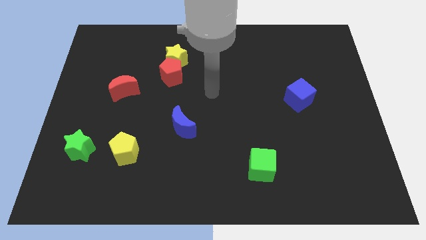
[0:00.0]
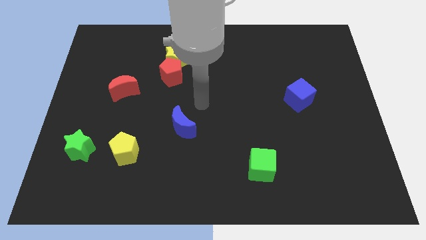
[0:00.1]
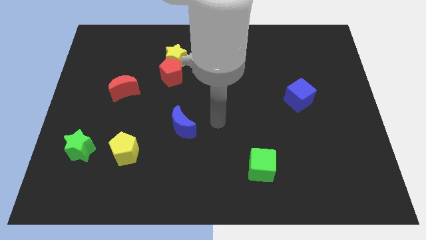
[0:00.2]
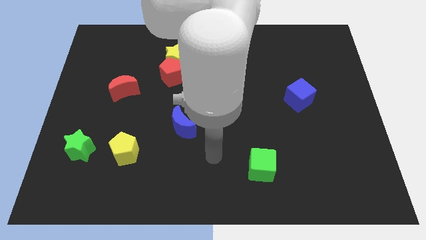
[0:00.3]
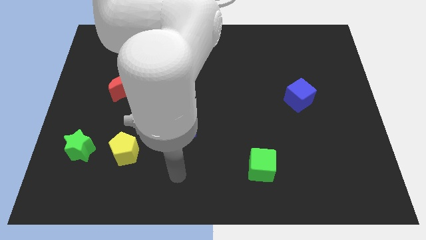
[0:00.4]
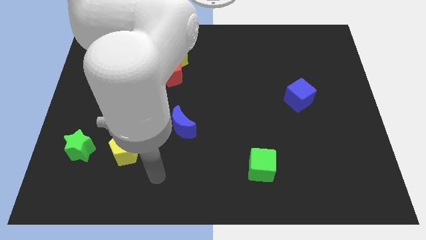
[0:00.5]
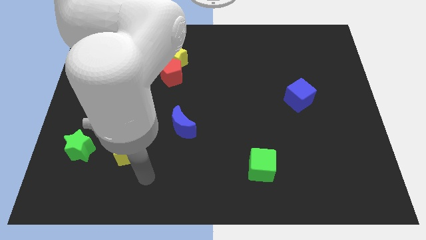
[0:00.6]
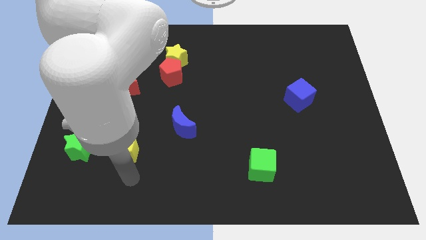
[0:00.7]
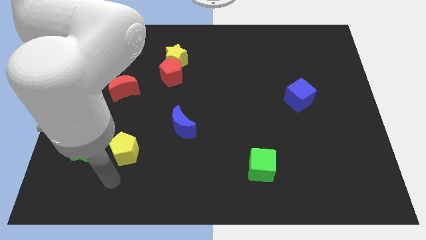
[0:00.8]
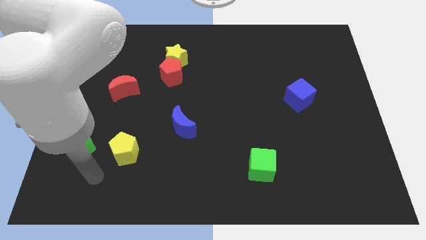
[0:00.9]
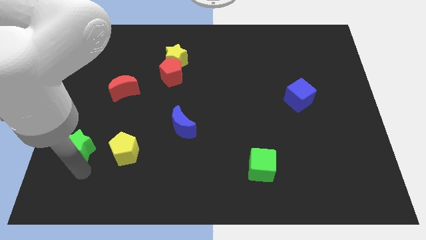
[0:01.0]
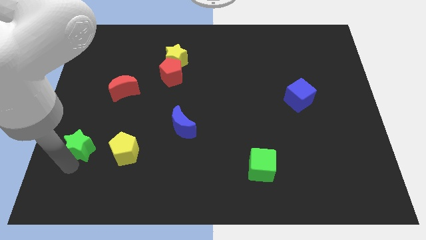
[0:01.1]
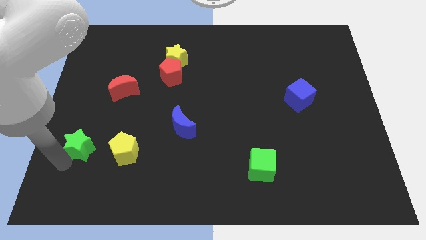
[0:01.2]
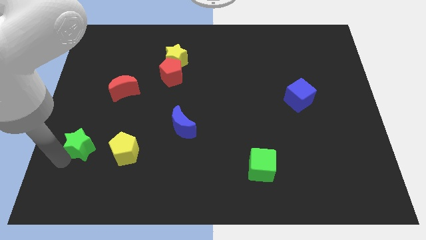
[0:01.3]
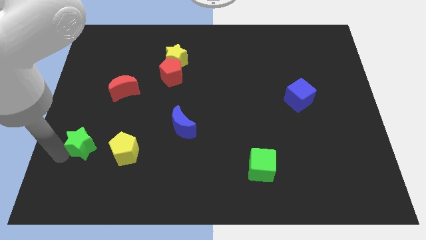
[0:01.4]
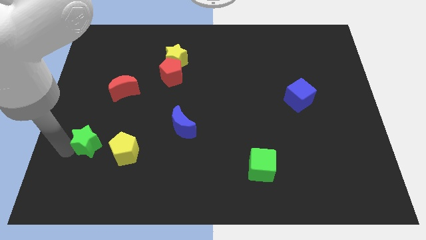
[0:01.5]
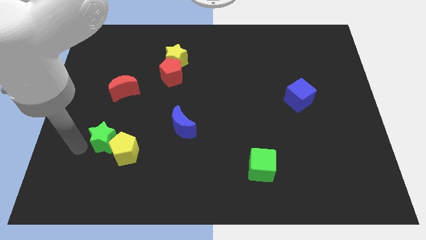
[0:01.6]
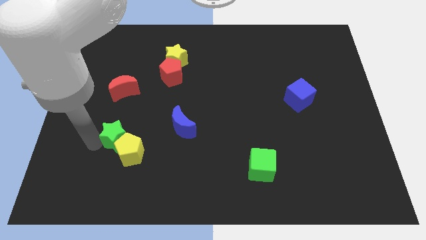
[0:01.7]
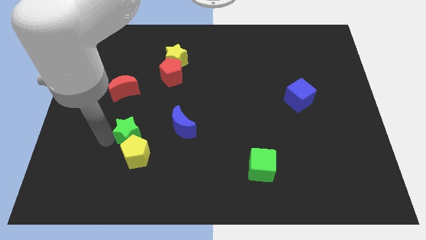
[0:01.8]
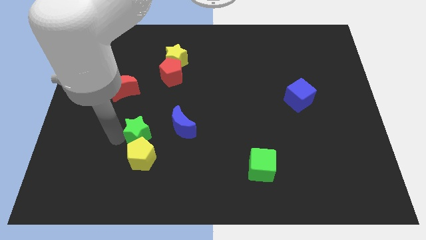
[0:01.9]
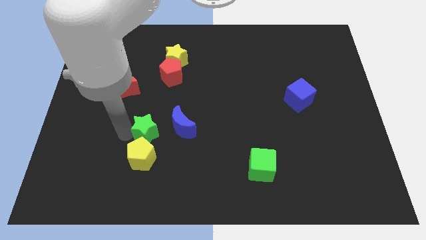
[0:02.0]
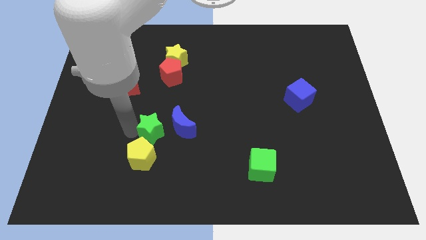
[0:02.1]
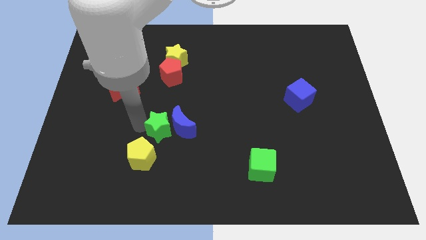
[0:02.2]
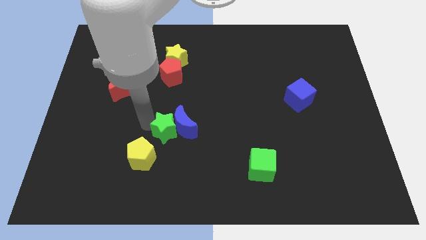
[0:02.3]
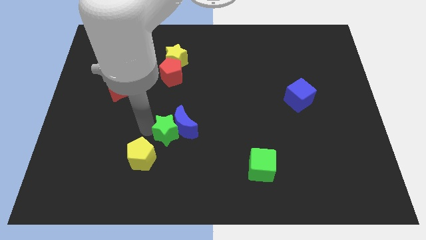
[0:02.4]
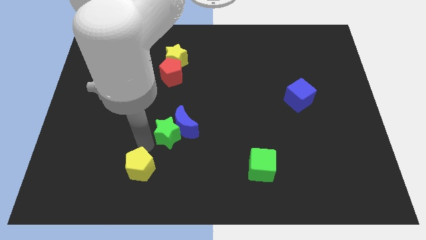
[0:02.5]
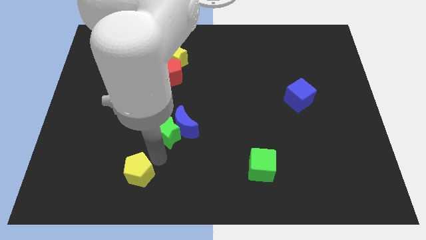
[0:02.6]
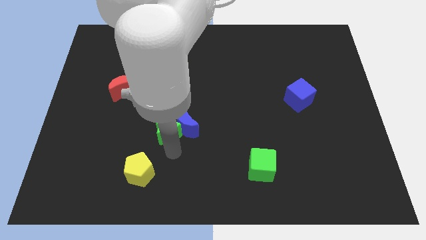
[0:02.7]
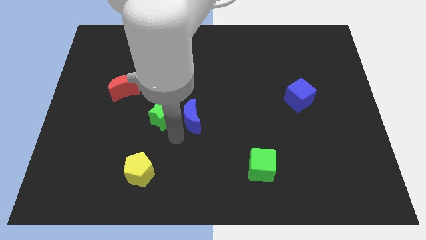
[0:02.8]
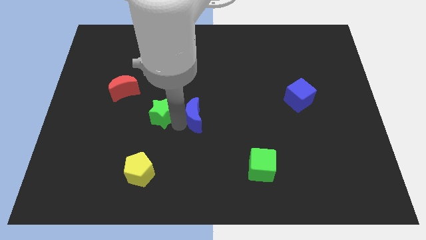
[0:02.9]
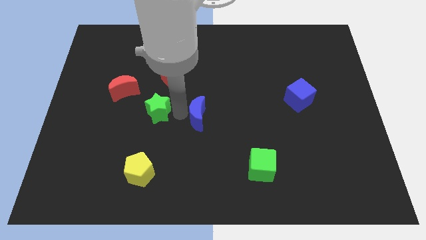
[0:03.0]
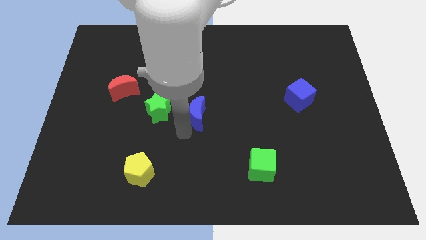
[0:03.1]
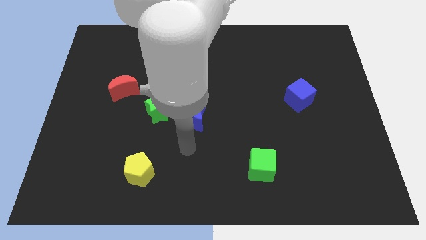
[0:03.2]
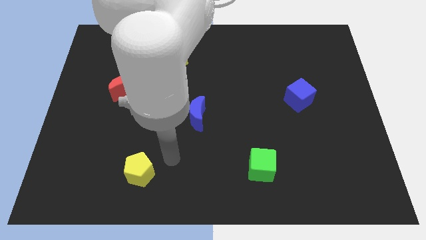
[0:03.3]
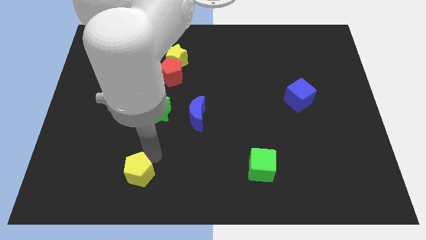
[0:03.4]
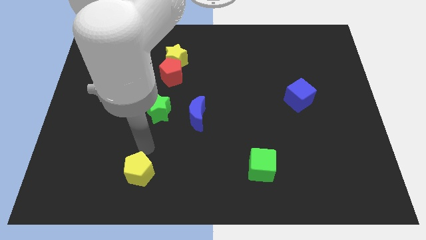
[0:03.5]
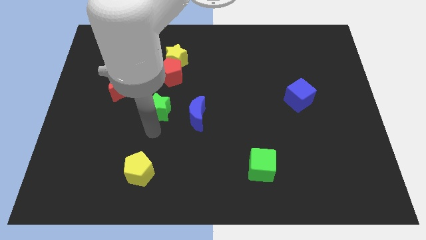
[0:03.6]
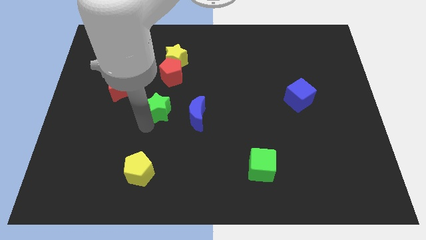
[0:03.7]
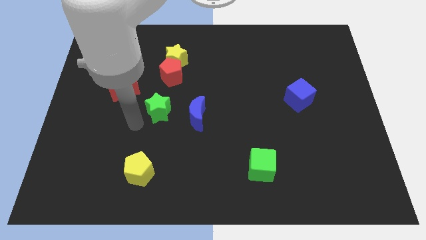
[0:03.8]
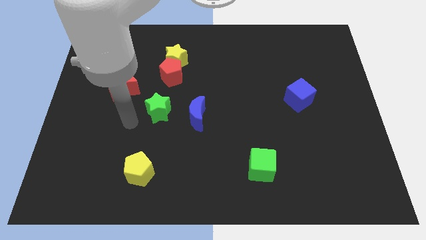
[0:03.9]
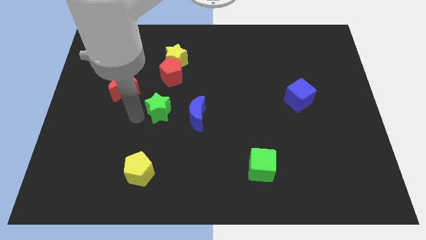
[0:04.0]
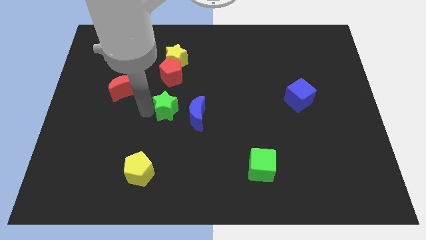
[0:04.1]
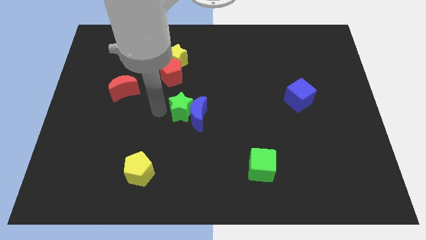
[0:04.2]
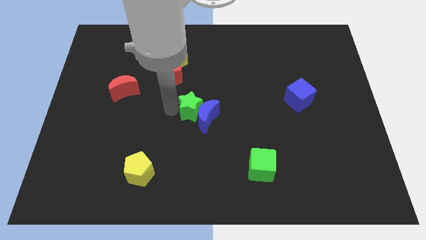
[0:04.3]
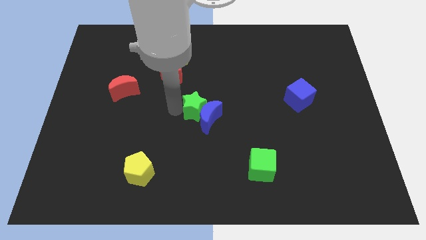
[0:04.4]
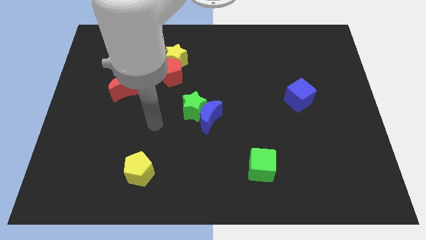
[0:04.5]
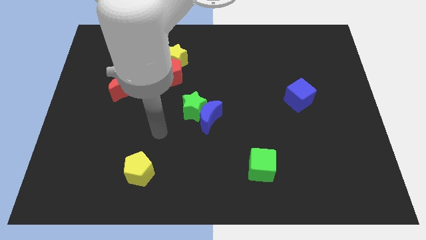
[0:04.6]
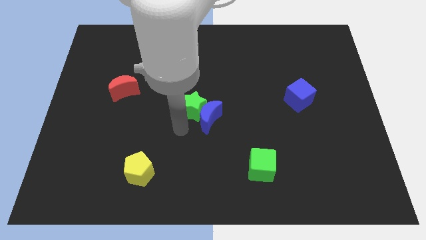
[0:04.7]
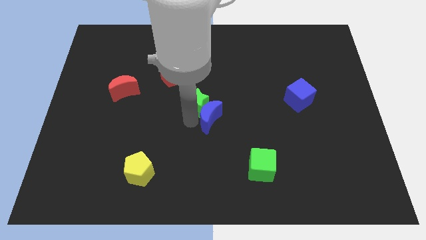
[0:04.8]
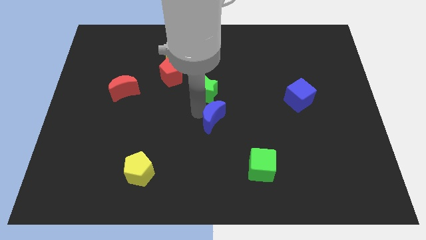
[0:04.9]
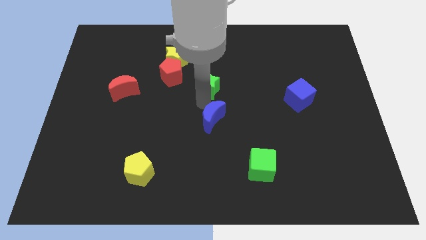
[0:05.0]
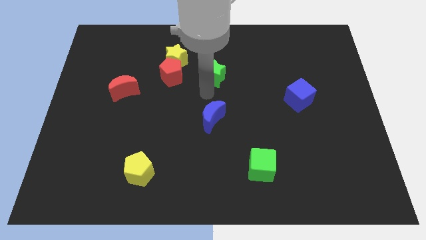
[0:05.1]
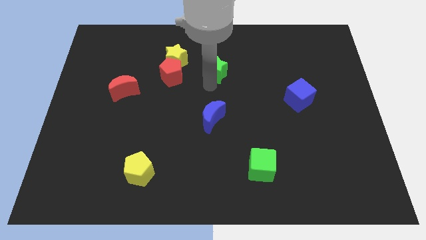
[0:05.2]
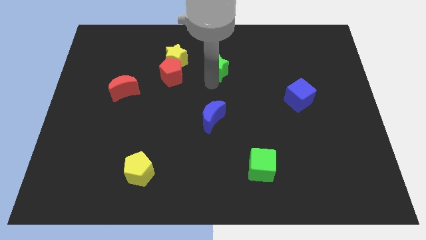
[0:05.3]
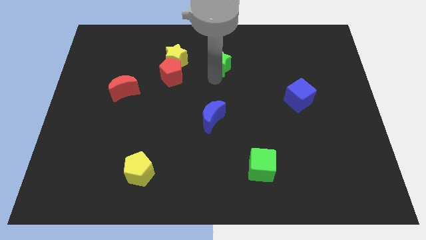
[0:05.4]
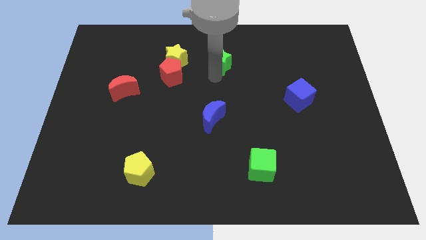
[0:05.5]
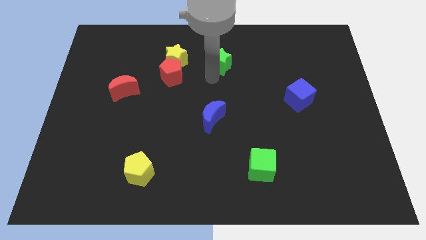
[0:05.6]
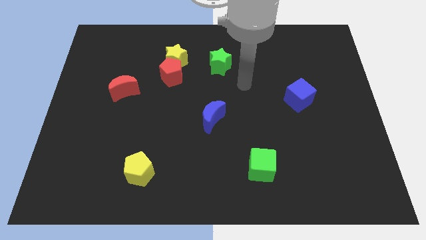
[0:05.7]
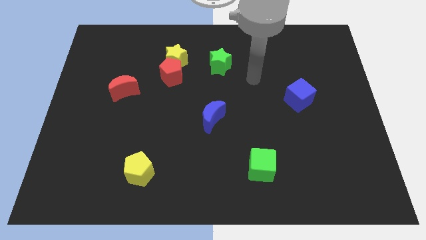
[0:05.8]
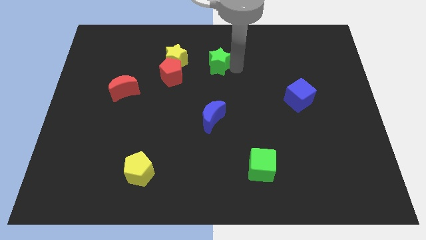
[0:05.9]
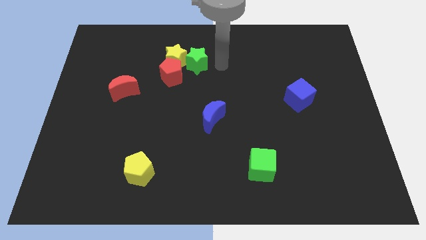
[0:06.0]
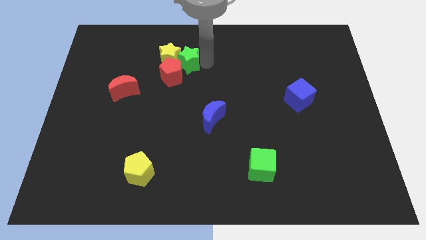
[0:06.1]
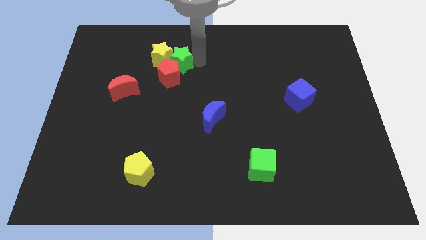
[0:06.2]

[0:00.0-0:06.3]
push the green star next to the yellow star

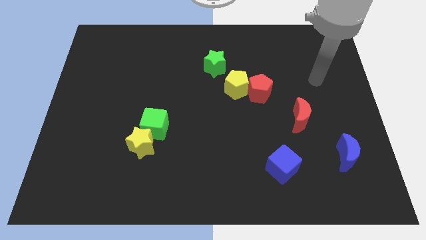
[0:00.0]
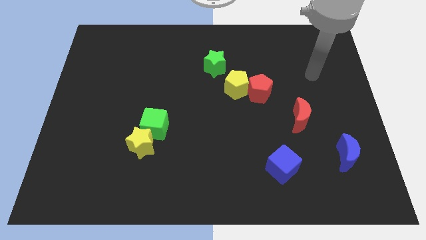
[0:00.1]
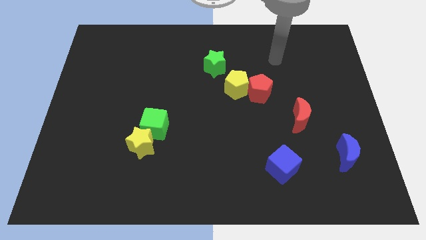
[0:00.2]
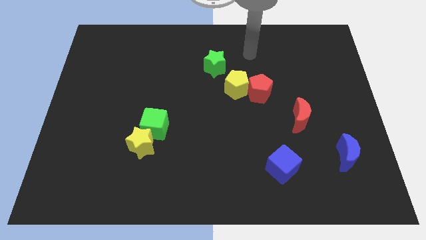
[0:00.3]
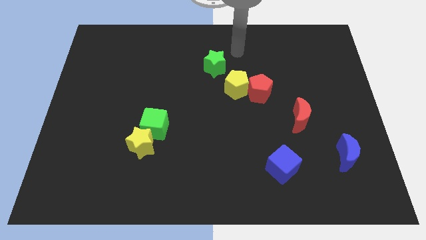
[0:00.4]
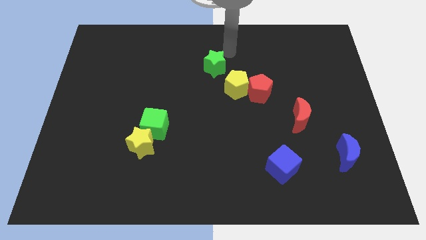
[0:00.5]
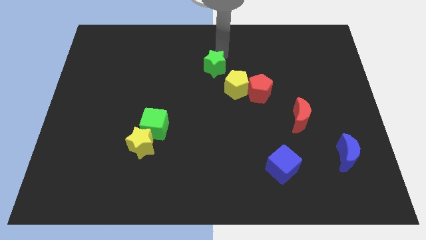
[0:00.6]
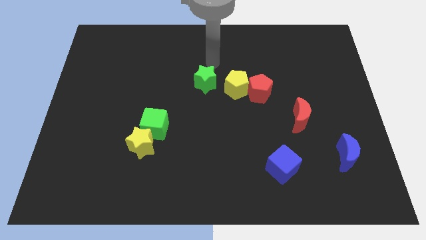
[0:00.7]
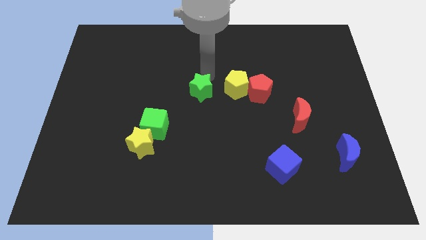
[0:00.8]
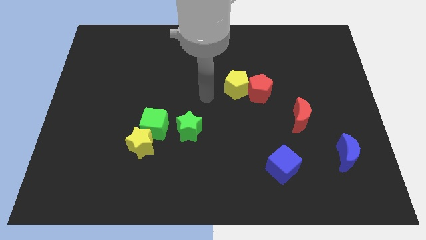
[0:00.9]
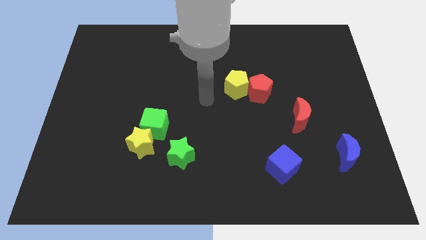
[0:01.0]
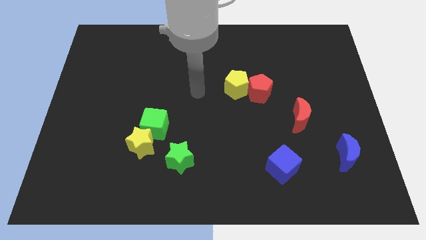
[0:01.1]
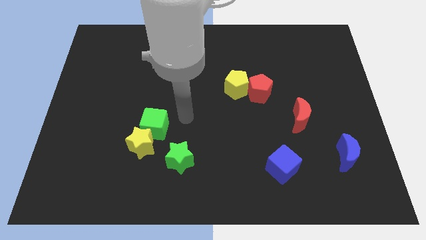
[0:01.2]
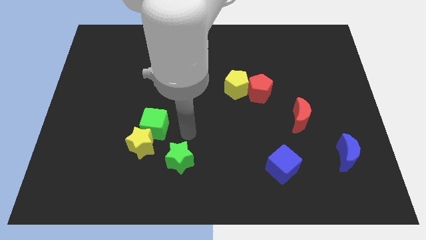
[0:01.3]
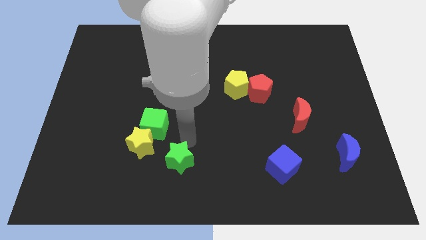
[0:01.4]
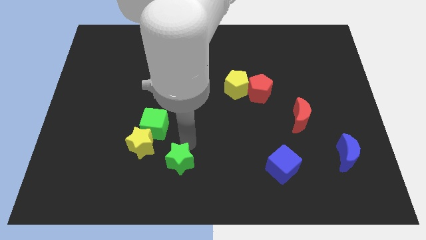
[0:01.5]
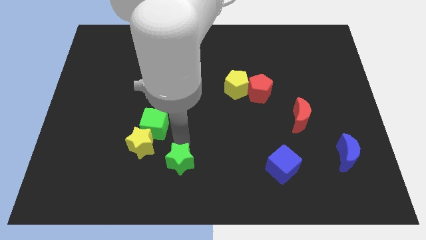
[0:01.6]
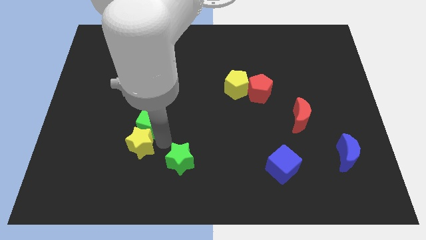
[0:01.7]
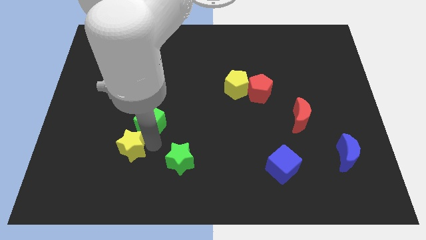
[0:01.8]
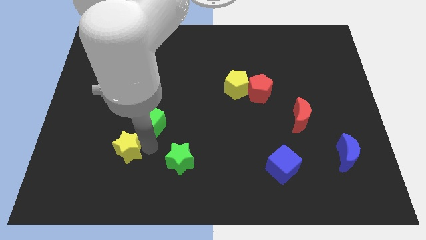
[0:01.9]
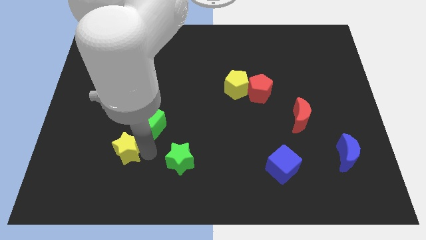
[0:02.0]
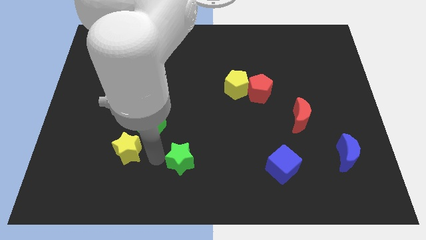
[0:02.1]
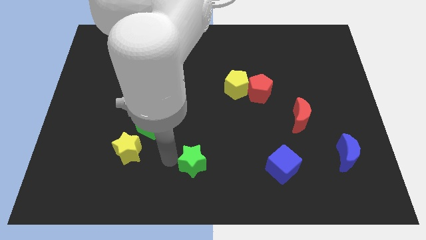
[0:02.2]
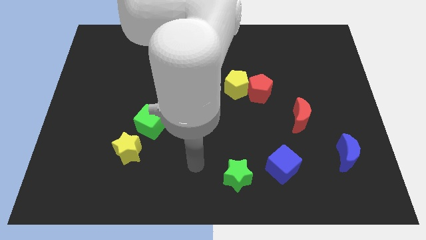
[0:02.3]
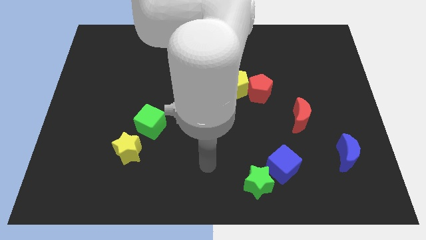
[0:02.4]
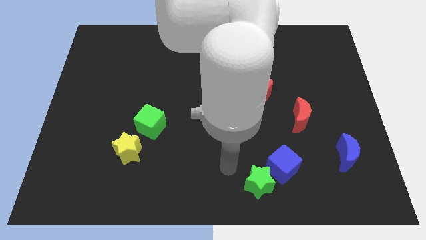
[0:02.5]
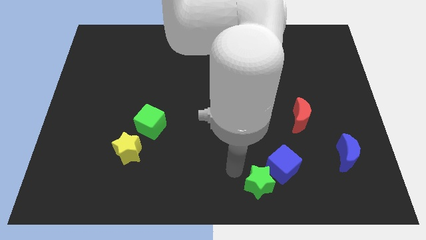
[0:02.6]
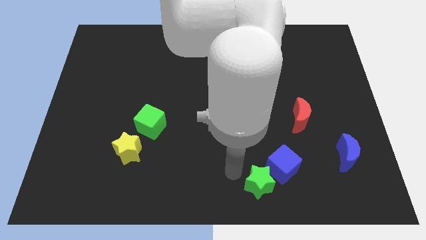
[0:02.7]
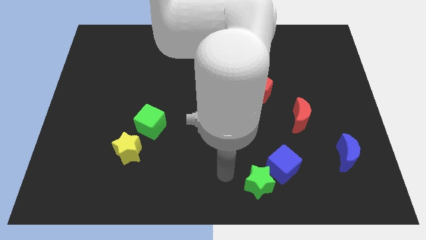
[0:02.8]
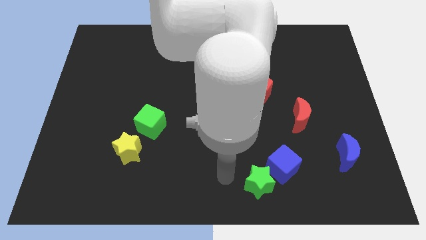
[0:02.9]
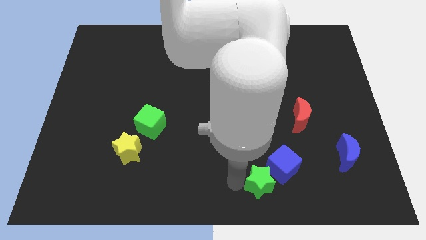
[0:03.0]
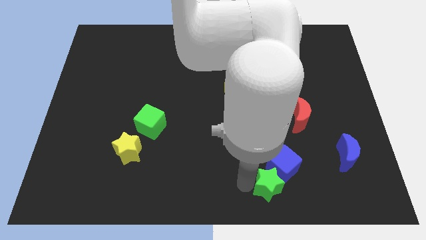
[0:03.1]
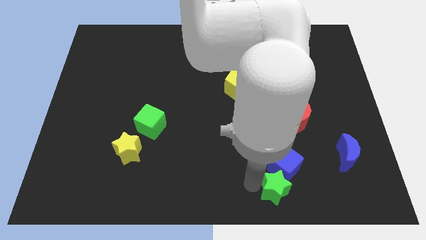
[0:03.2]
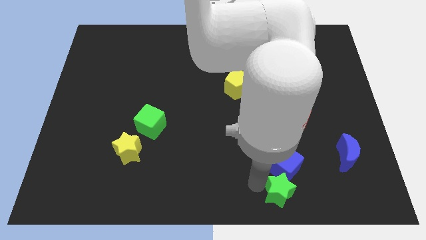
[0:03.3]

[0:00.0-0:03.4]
put the green star close to the blue cube
